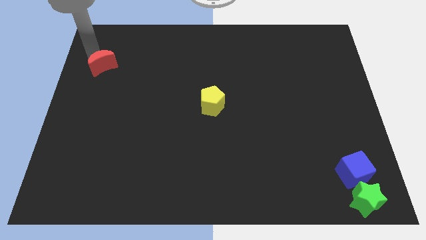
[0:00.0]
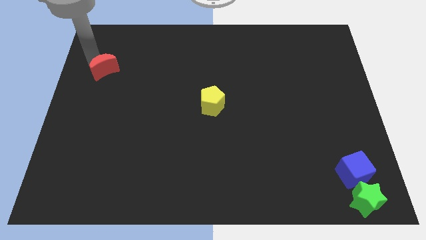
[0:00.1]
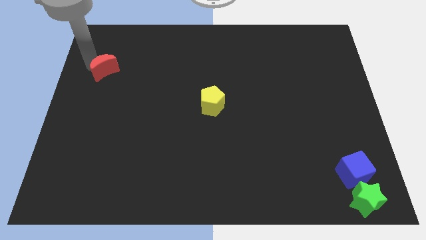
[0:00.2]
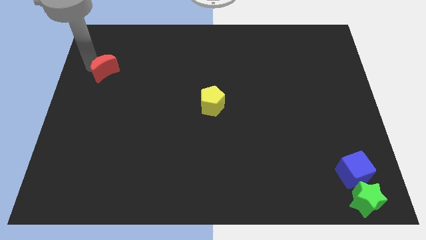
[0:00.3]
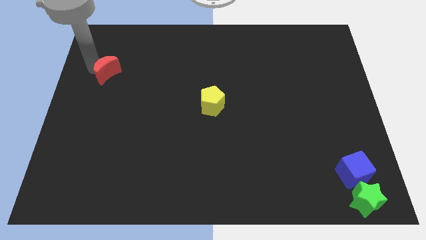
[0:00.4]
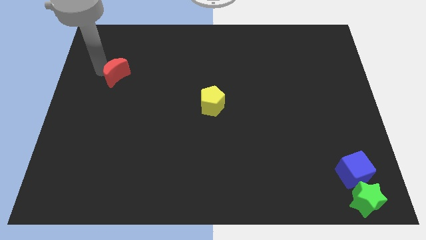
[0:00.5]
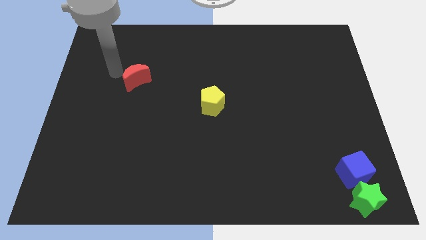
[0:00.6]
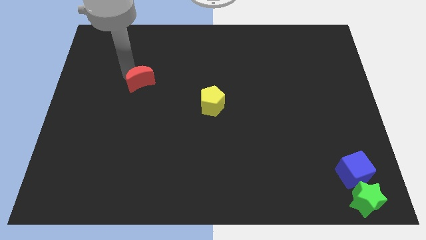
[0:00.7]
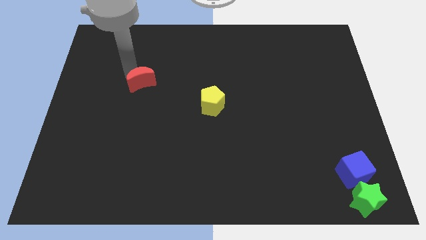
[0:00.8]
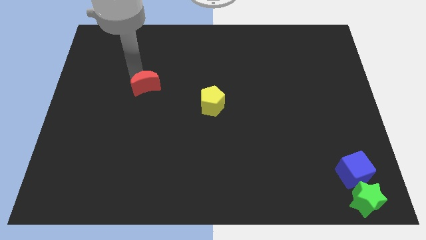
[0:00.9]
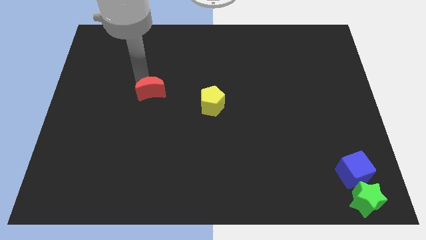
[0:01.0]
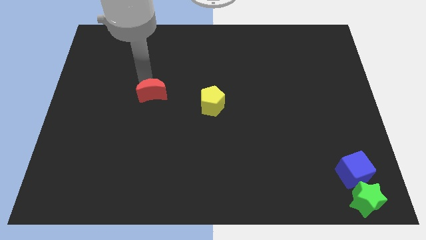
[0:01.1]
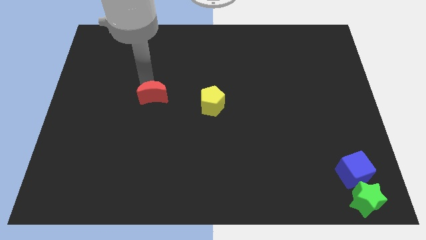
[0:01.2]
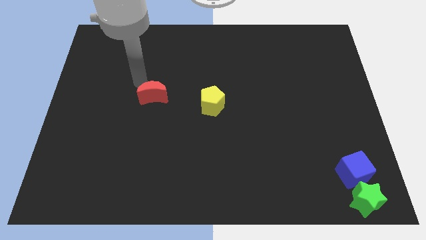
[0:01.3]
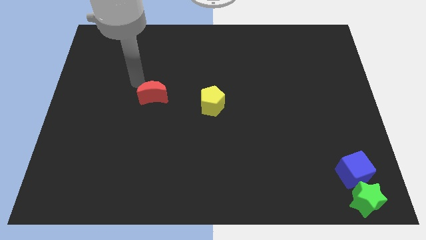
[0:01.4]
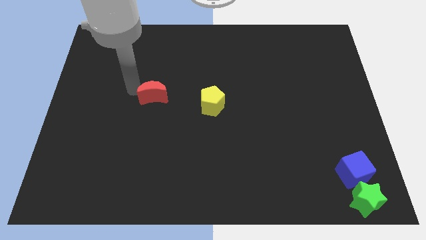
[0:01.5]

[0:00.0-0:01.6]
slide the red moon towards the left side of the yellow pentagon

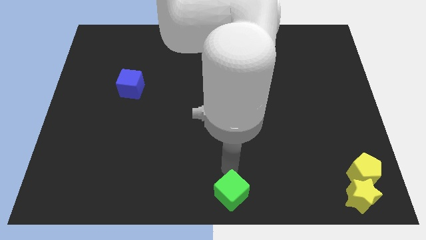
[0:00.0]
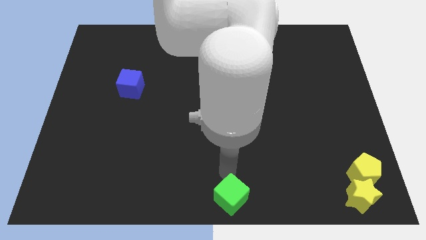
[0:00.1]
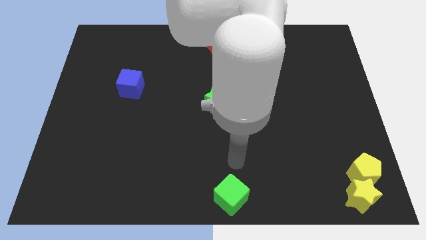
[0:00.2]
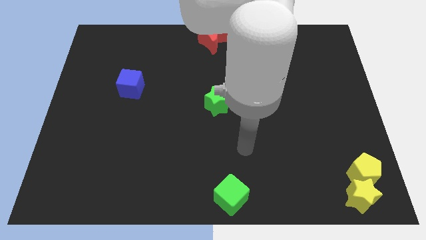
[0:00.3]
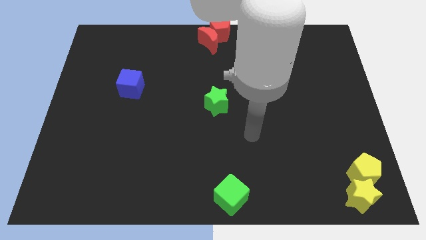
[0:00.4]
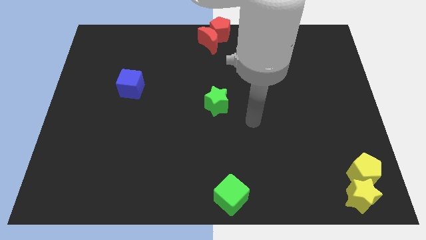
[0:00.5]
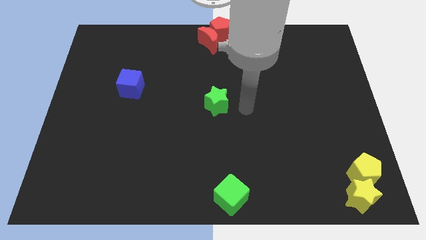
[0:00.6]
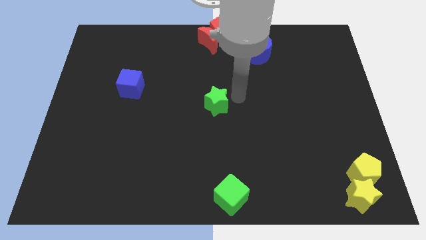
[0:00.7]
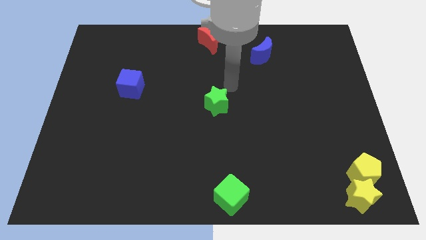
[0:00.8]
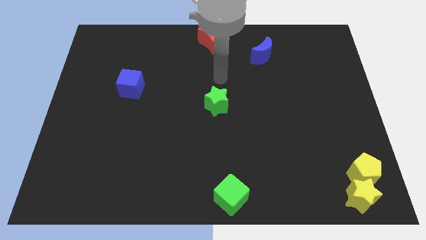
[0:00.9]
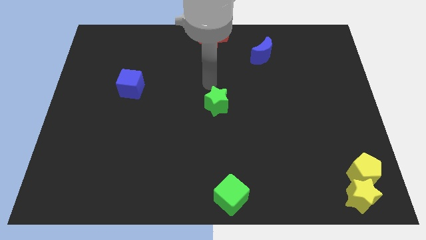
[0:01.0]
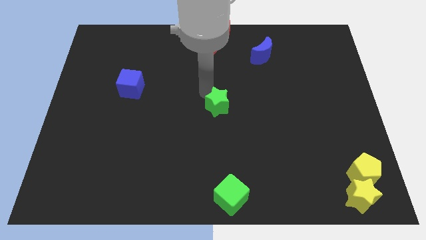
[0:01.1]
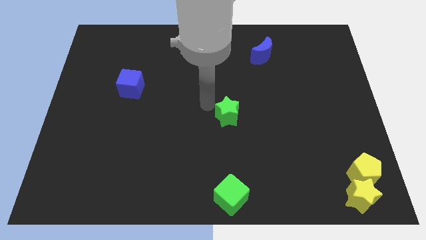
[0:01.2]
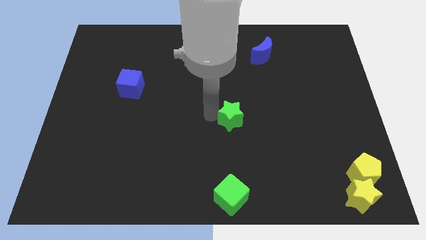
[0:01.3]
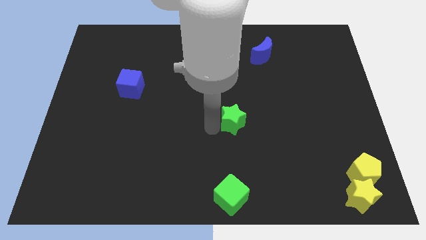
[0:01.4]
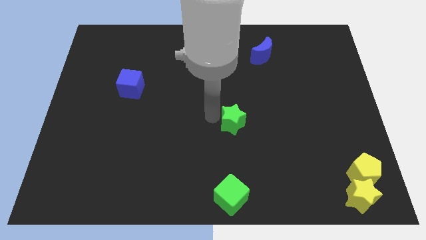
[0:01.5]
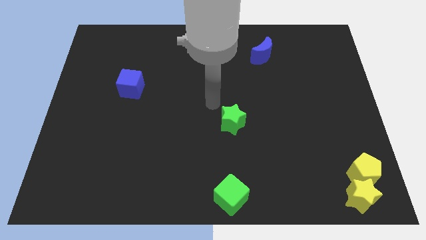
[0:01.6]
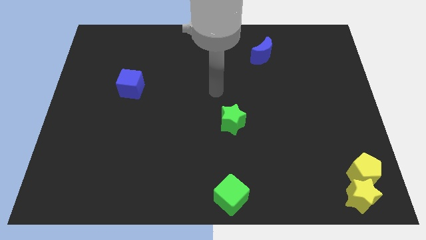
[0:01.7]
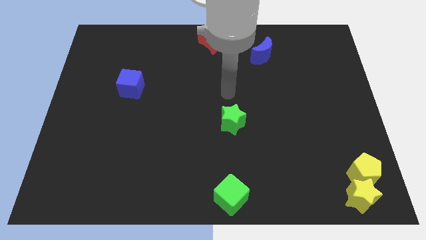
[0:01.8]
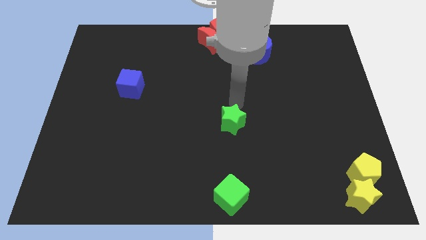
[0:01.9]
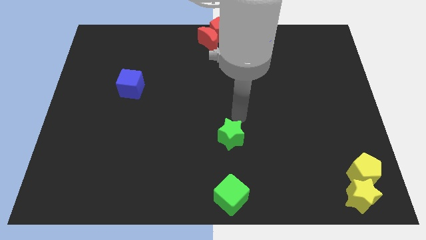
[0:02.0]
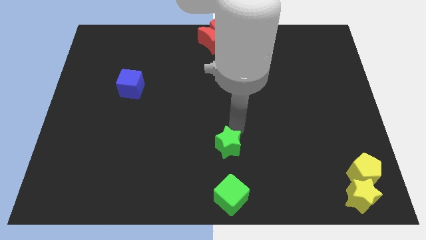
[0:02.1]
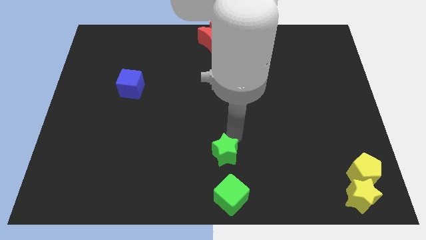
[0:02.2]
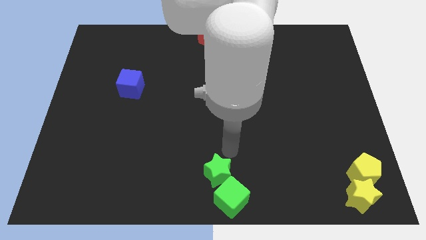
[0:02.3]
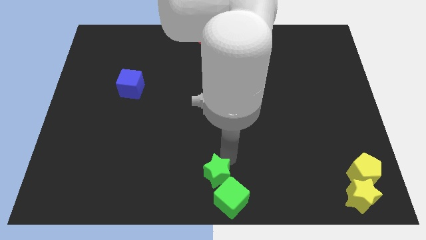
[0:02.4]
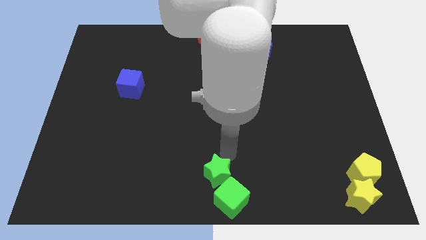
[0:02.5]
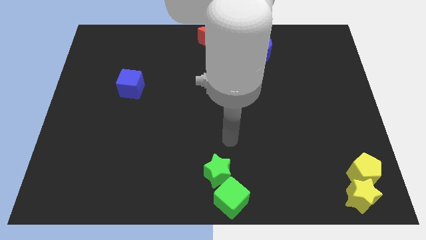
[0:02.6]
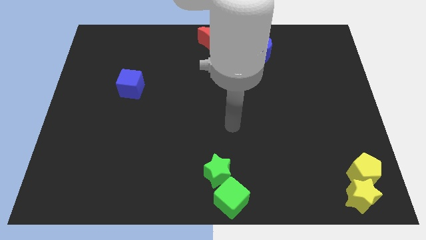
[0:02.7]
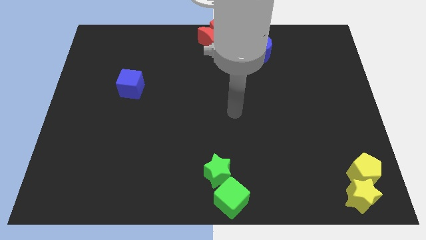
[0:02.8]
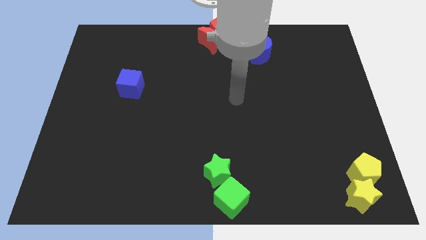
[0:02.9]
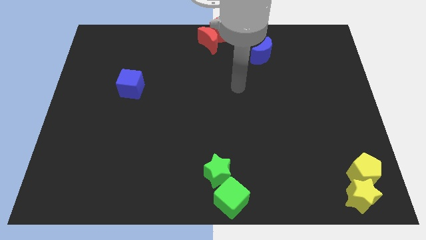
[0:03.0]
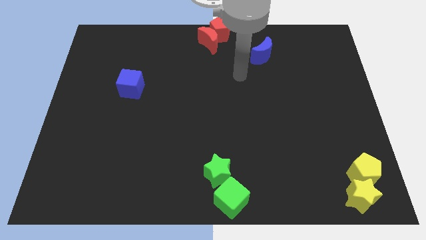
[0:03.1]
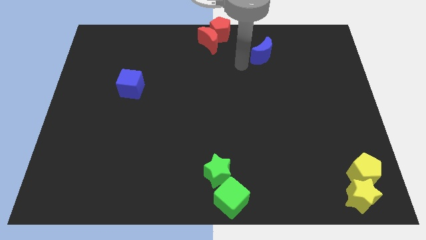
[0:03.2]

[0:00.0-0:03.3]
drag the green star into the green cube

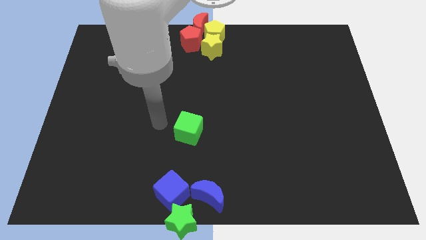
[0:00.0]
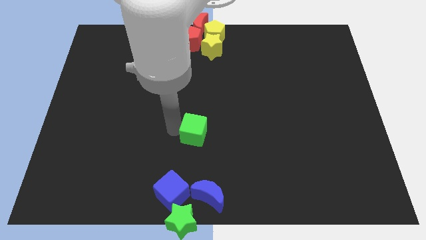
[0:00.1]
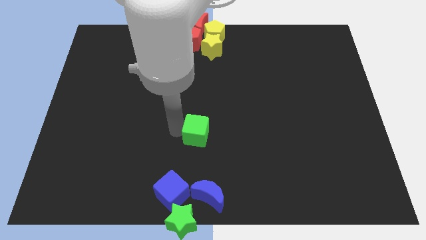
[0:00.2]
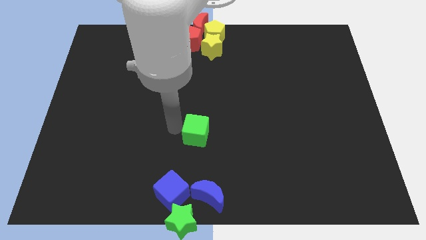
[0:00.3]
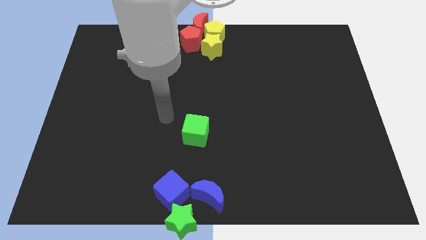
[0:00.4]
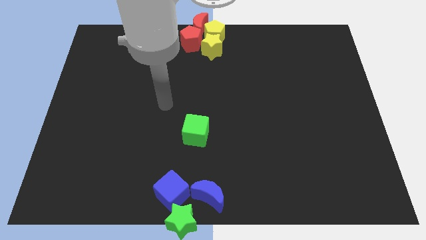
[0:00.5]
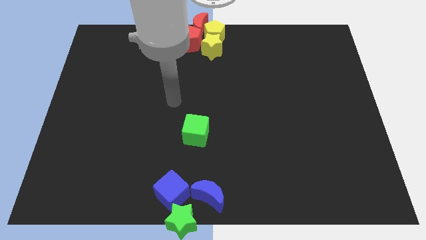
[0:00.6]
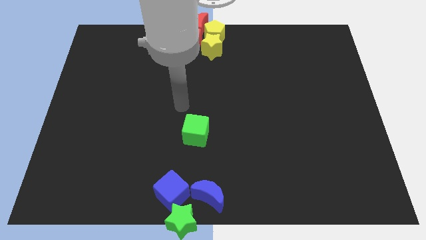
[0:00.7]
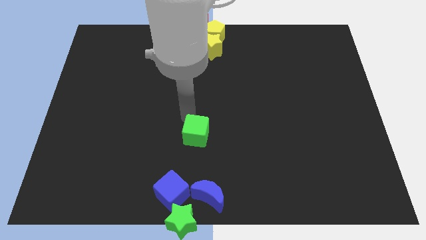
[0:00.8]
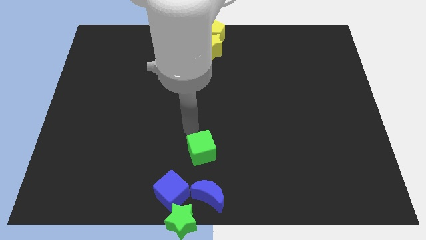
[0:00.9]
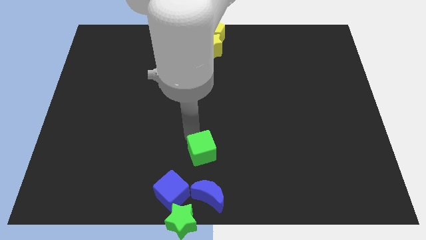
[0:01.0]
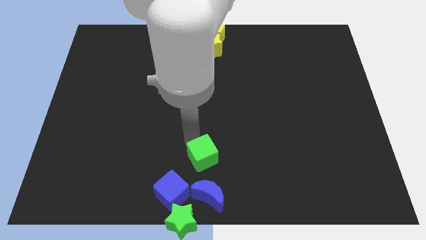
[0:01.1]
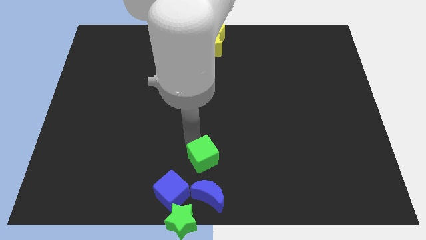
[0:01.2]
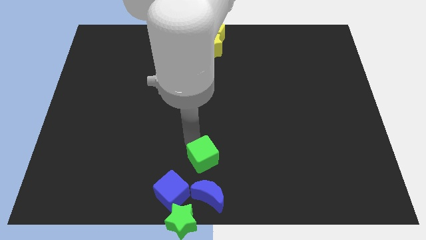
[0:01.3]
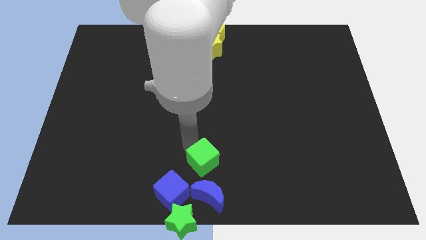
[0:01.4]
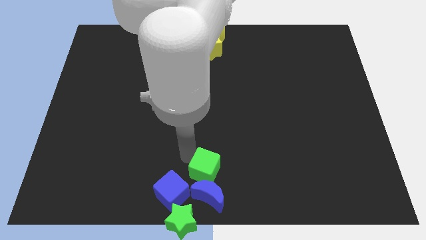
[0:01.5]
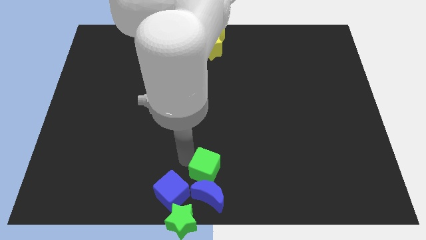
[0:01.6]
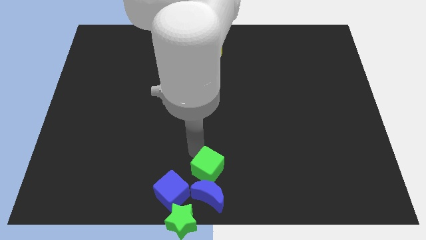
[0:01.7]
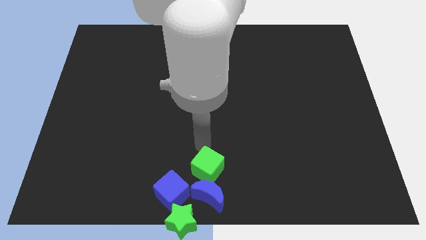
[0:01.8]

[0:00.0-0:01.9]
place green cube near blue crescent

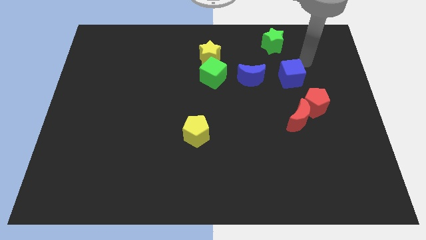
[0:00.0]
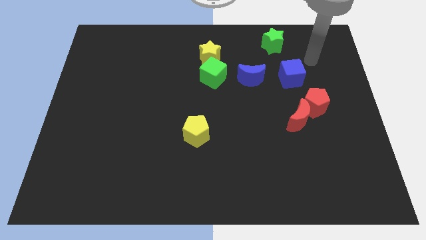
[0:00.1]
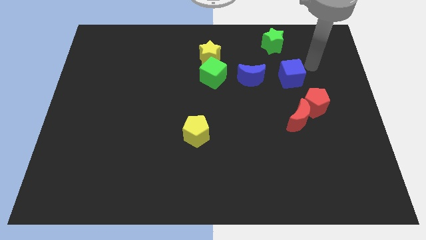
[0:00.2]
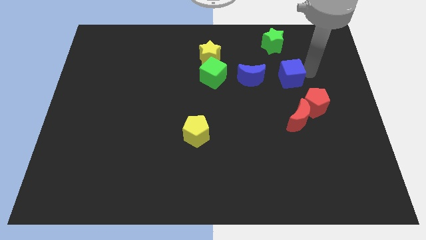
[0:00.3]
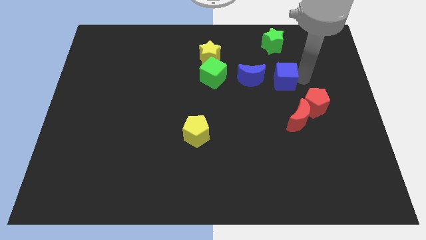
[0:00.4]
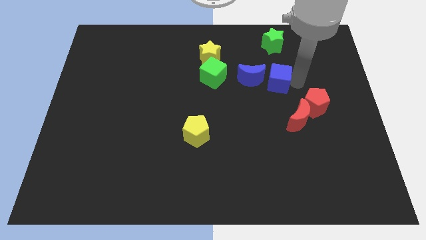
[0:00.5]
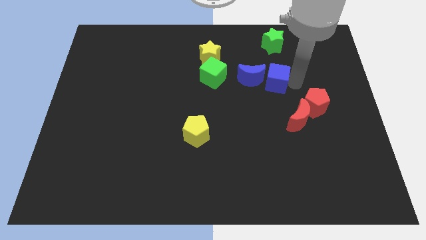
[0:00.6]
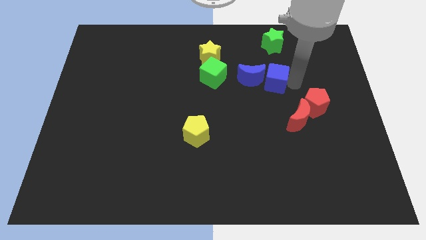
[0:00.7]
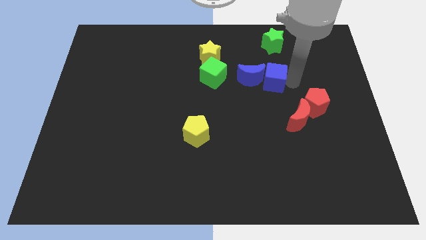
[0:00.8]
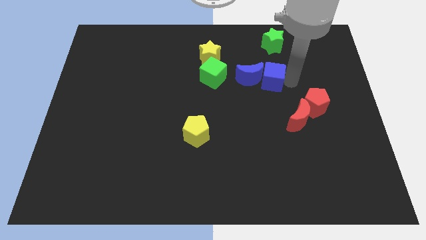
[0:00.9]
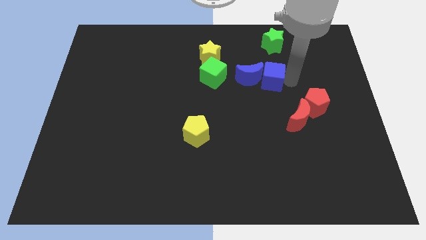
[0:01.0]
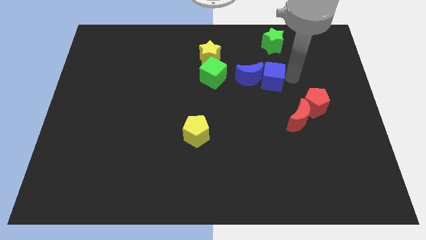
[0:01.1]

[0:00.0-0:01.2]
move blue cube into blue moon

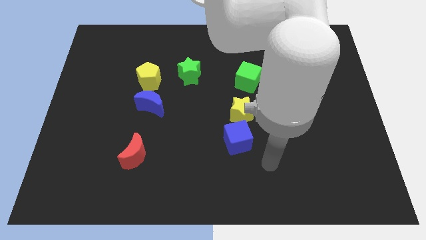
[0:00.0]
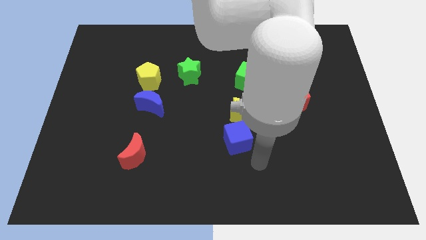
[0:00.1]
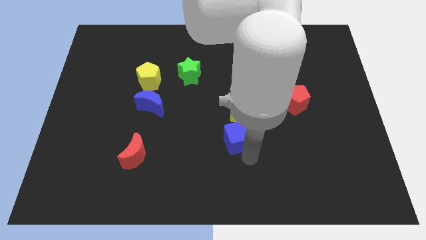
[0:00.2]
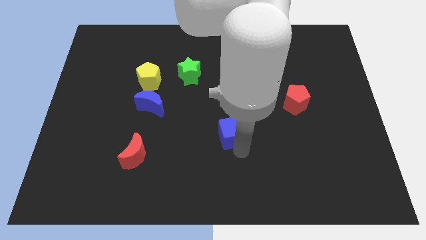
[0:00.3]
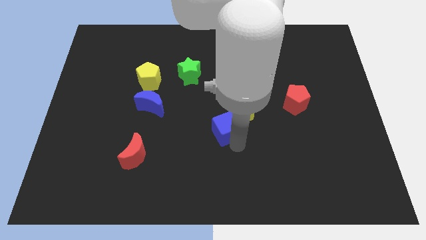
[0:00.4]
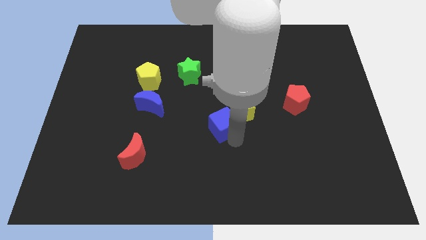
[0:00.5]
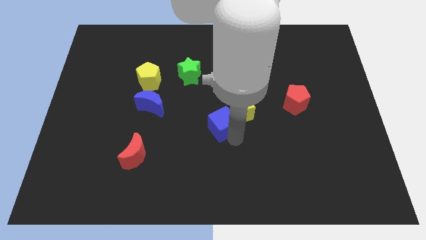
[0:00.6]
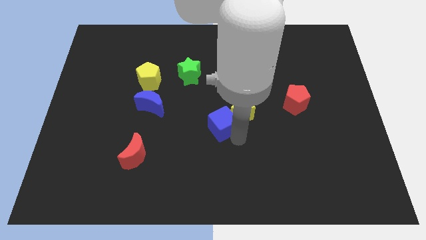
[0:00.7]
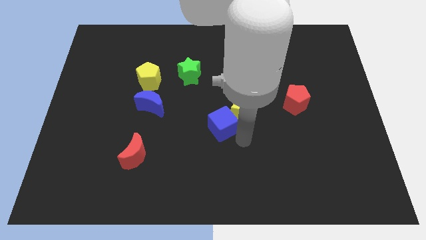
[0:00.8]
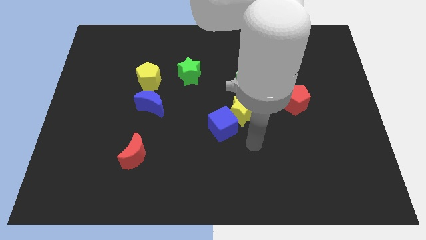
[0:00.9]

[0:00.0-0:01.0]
drag the blue cube into the yellow star
